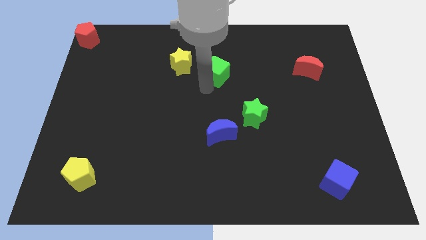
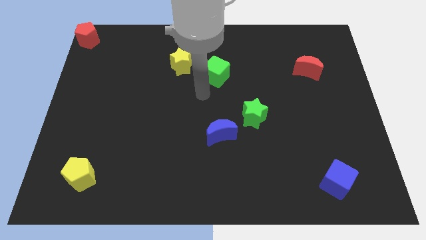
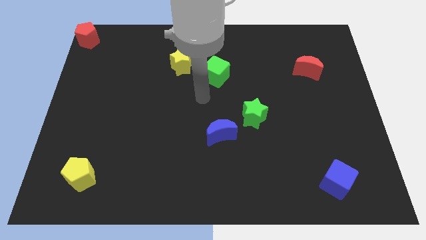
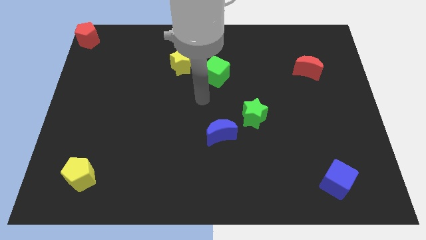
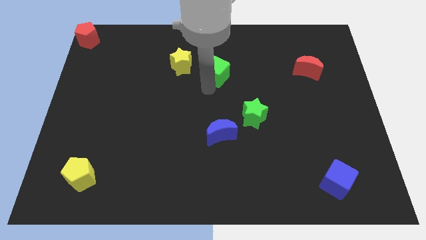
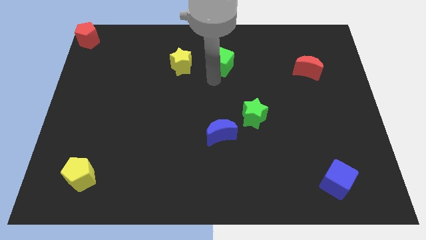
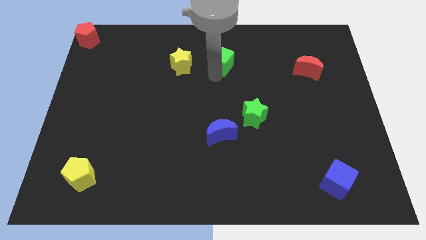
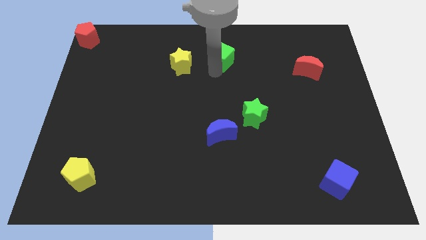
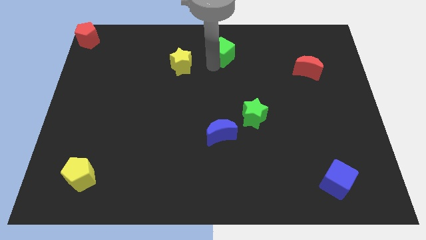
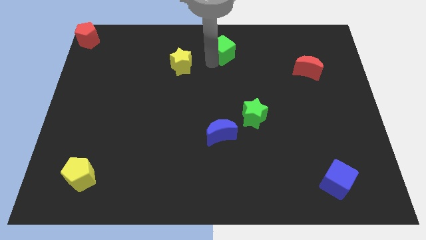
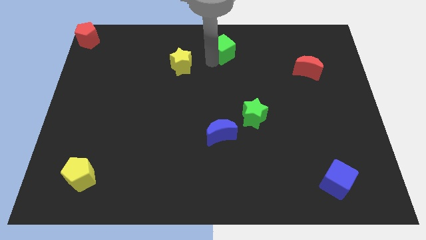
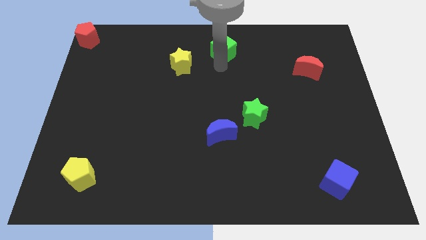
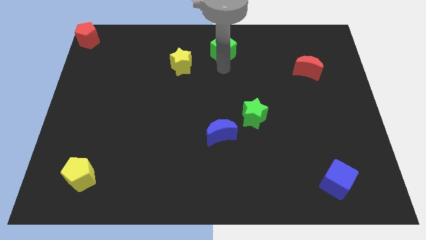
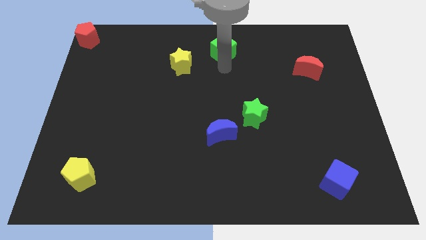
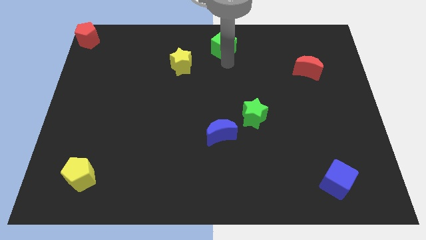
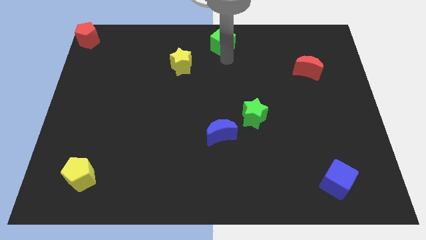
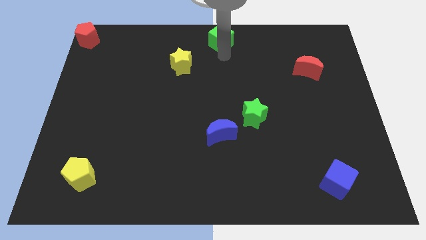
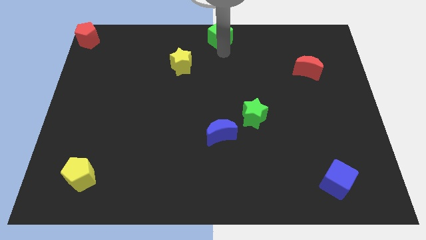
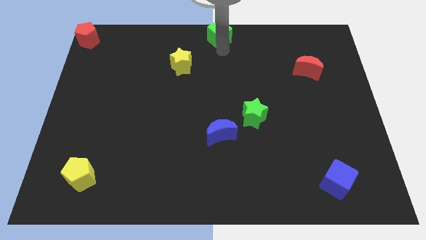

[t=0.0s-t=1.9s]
place the green cube to the top center

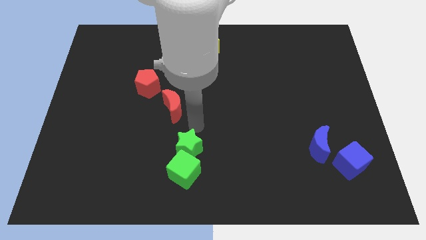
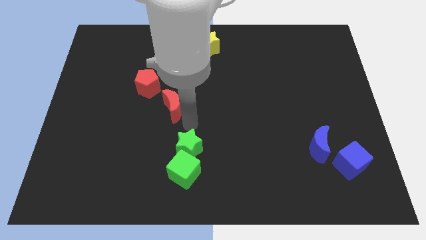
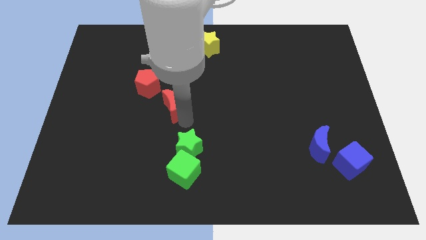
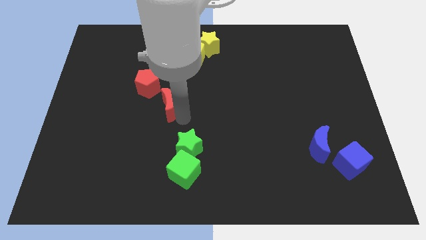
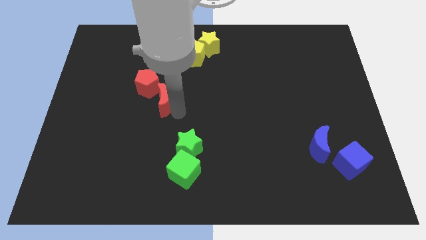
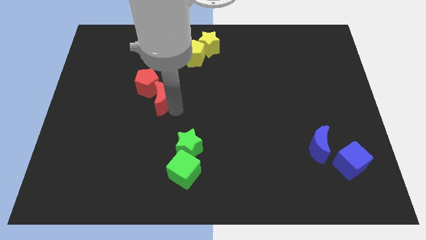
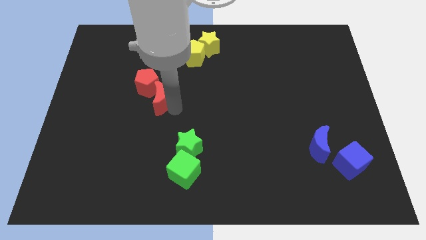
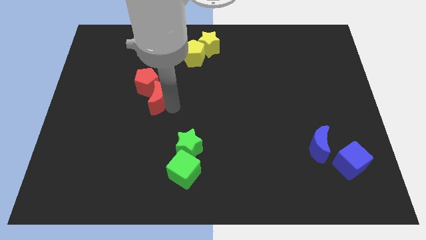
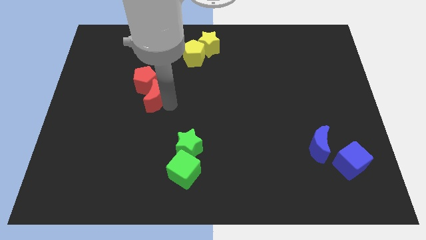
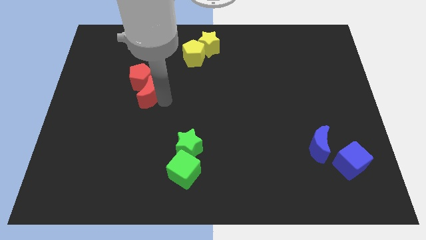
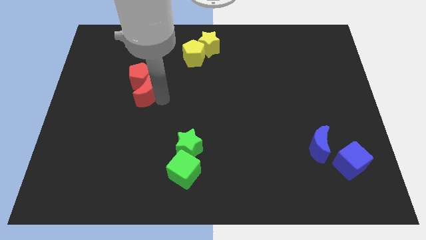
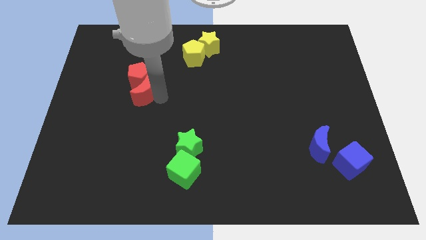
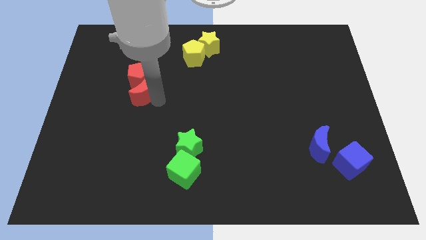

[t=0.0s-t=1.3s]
push red moon in to red pentagon

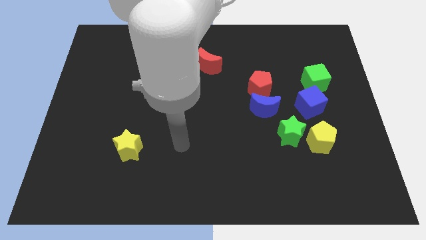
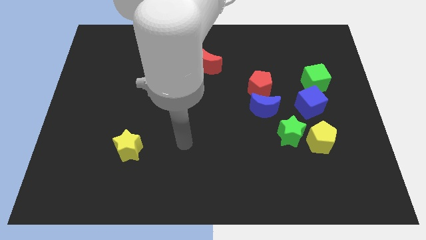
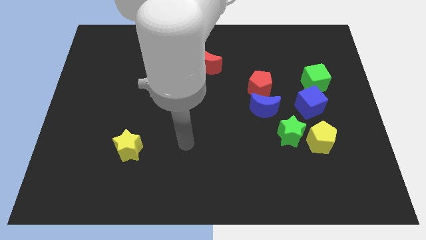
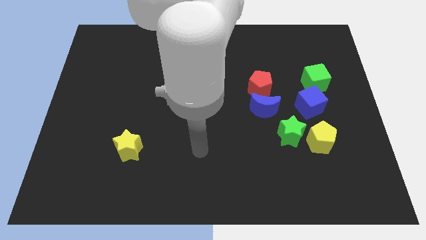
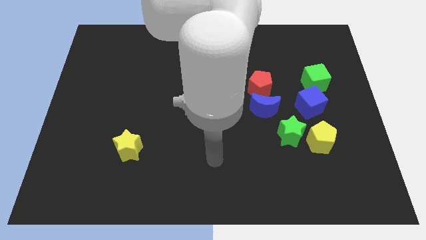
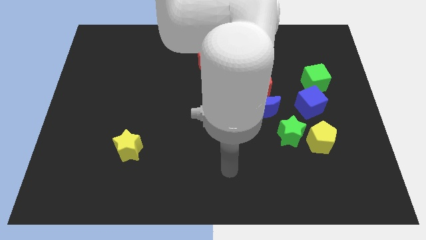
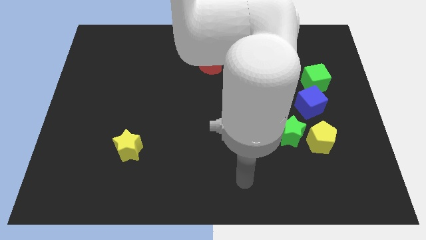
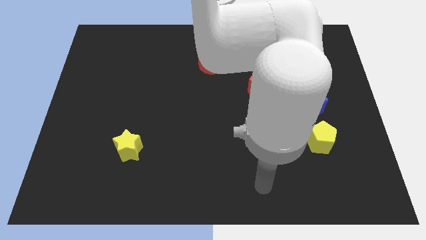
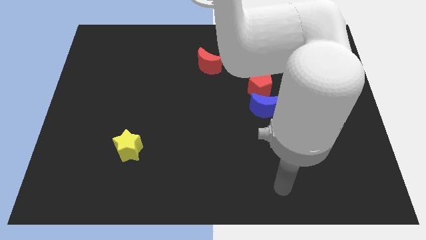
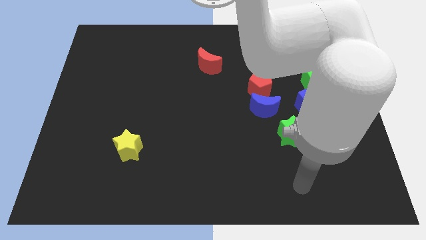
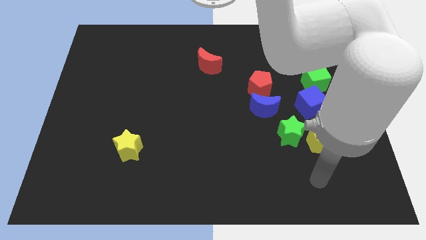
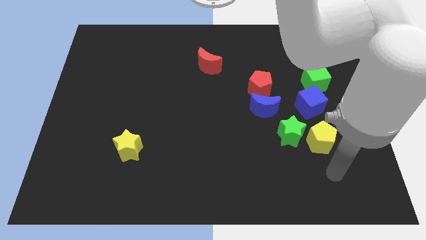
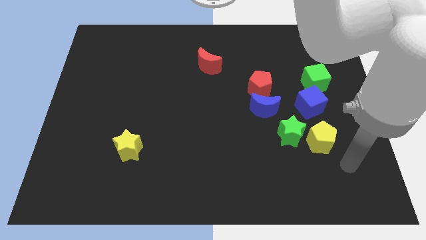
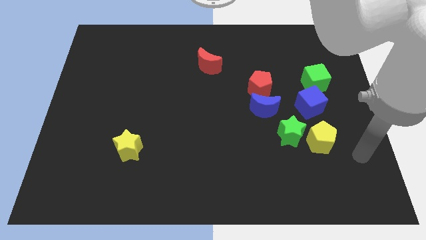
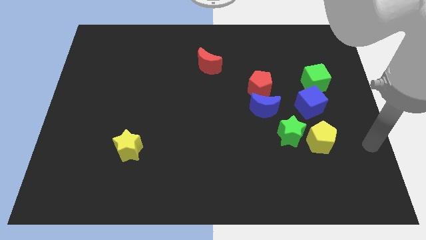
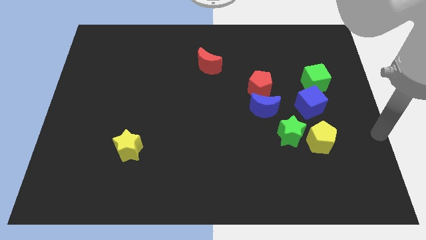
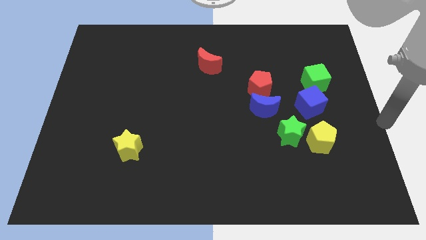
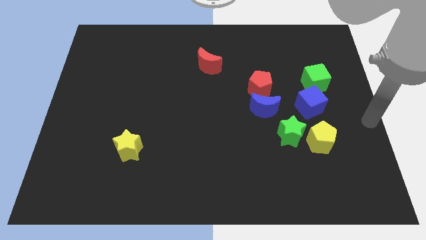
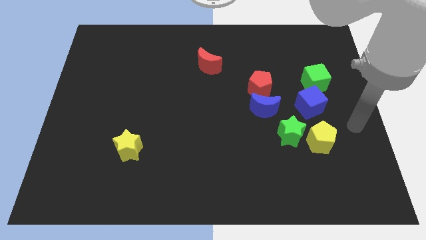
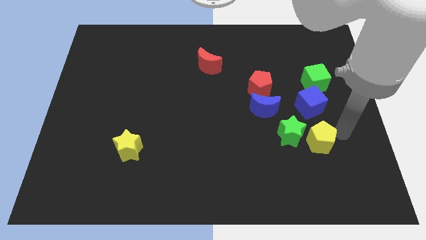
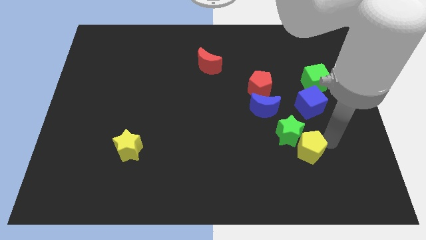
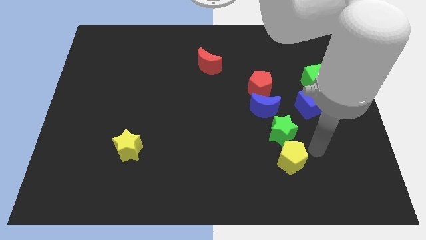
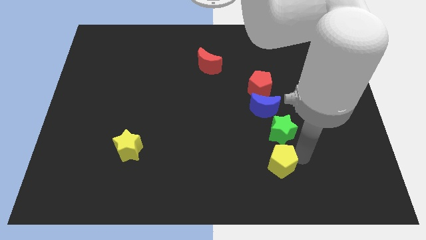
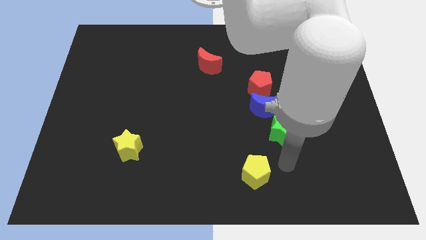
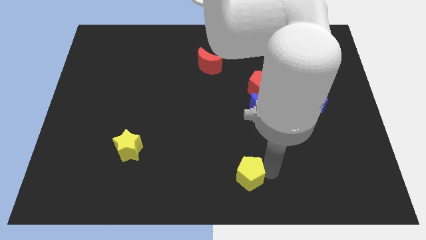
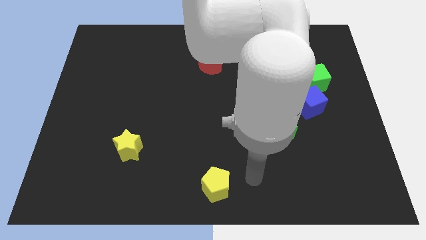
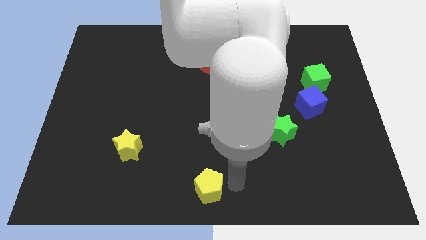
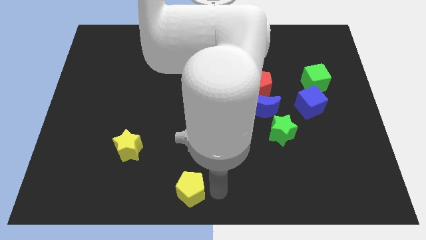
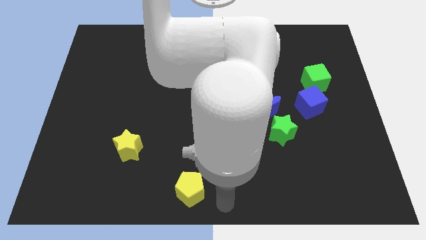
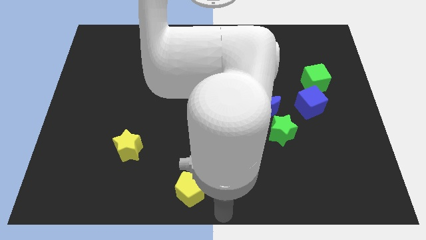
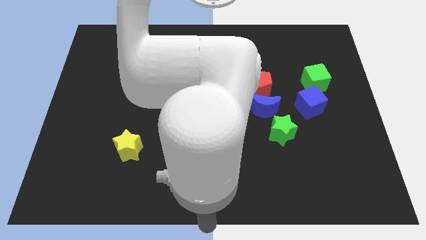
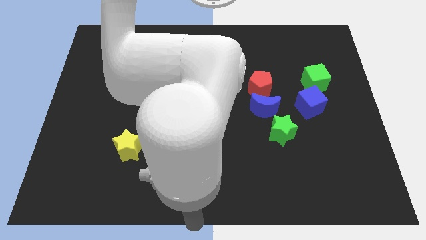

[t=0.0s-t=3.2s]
push the yellow pentagon towards the left side

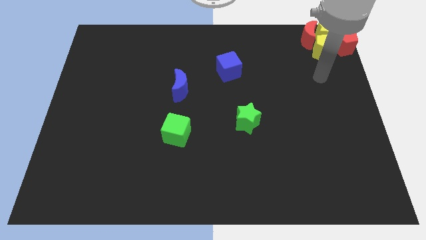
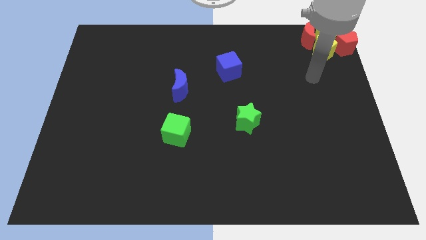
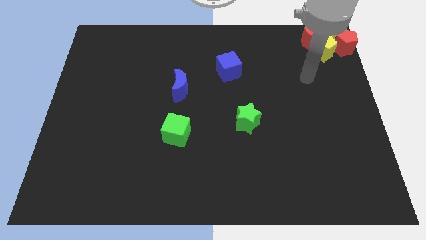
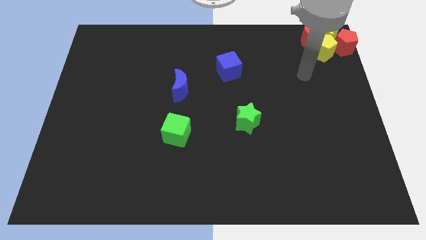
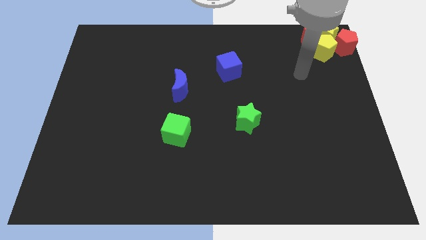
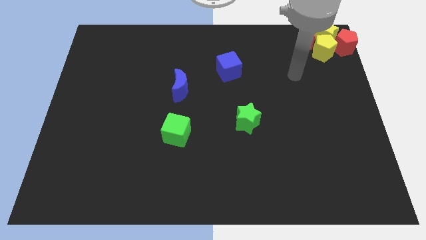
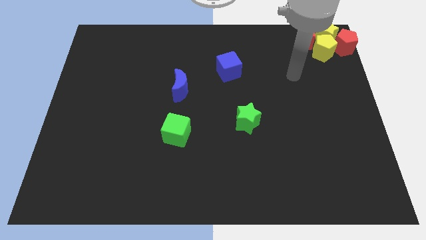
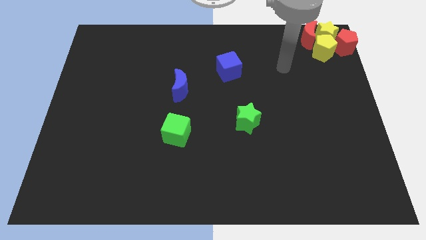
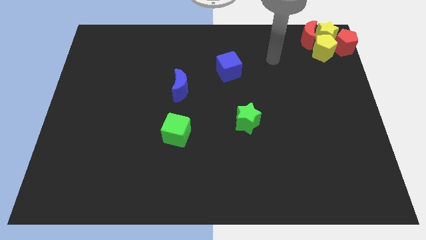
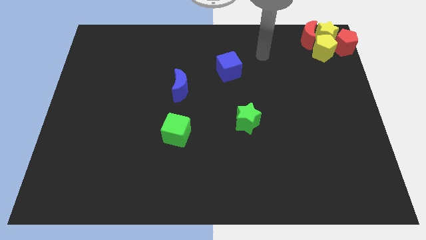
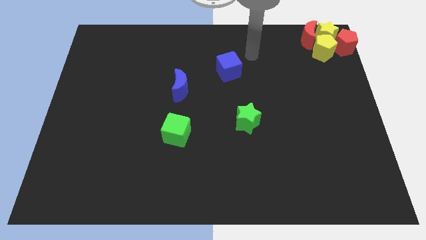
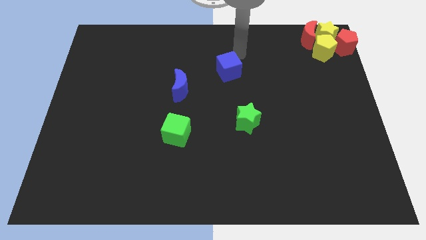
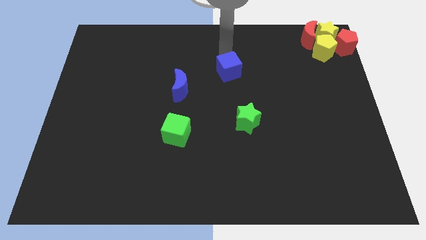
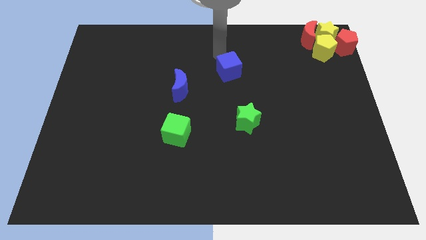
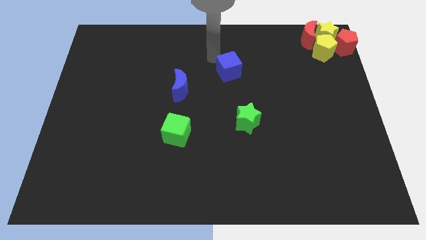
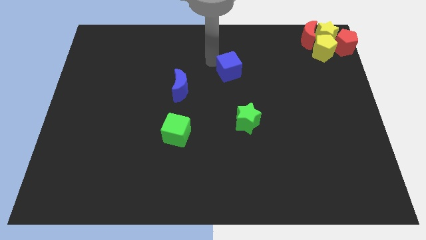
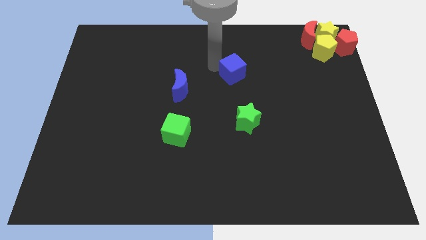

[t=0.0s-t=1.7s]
point your arm at the top left side of blue cube

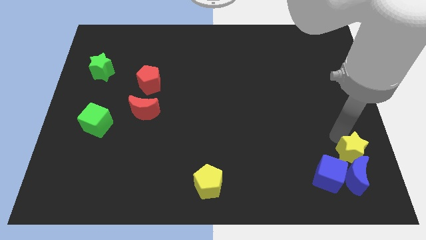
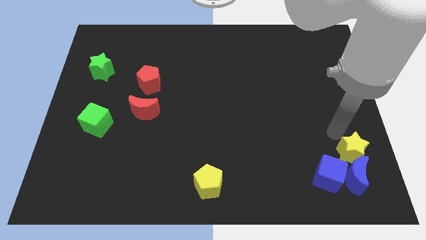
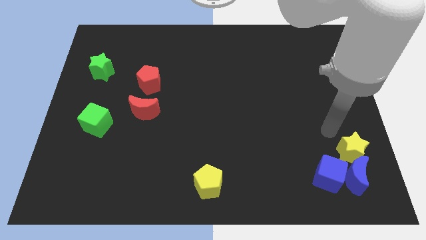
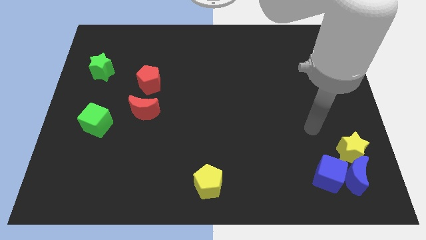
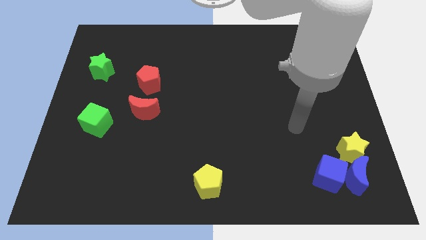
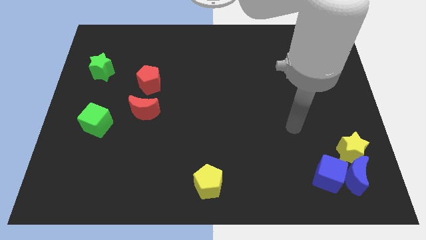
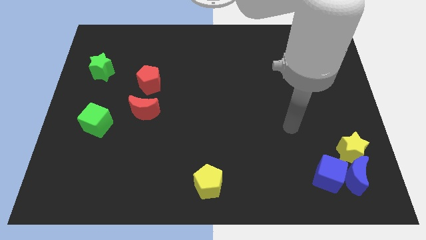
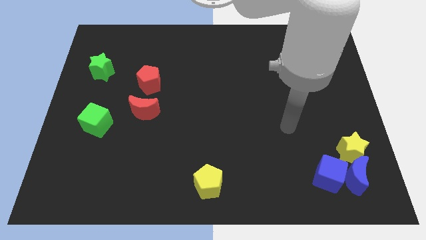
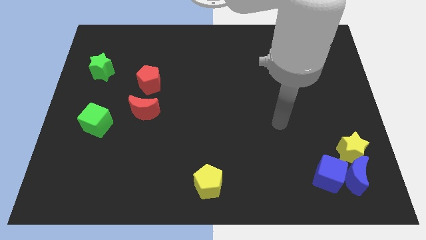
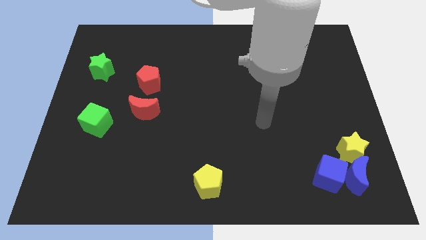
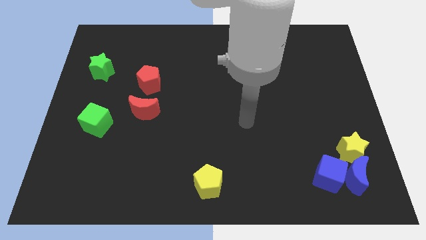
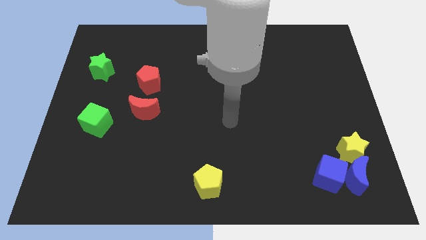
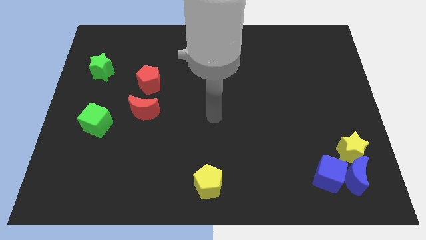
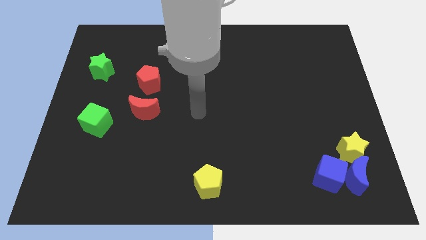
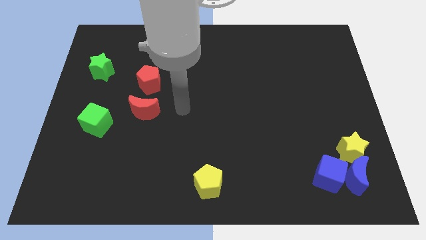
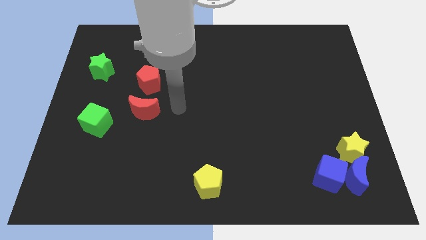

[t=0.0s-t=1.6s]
move your arm to the left of the red moon
